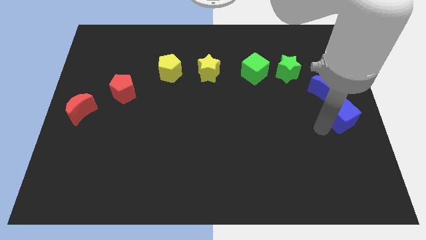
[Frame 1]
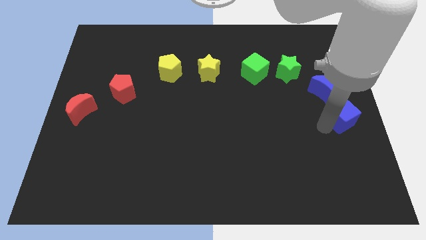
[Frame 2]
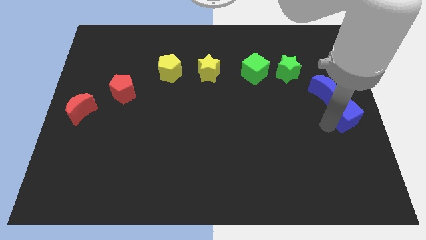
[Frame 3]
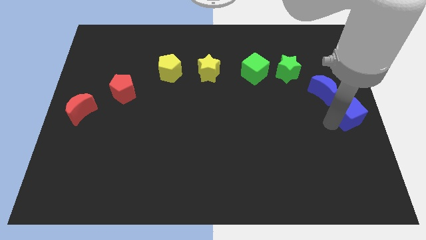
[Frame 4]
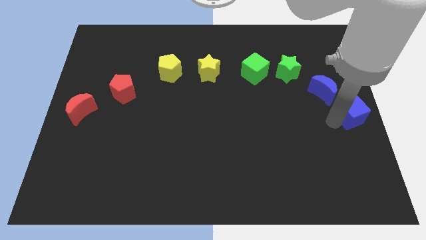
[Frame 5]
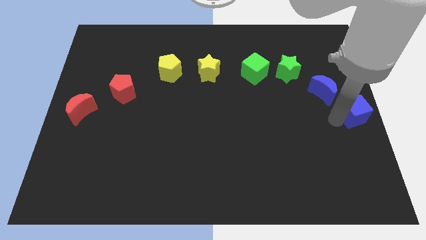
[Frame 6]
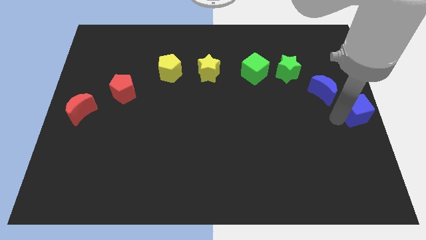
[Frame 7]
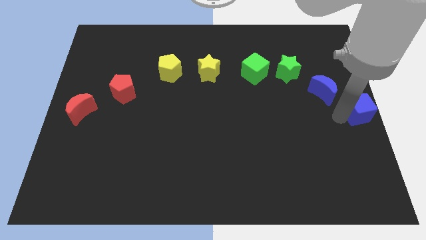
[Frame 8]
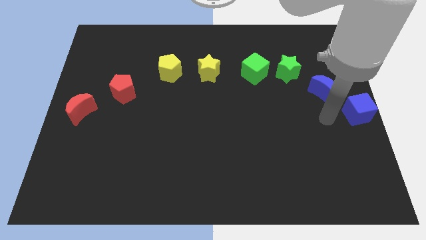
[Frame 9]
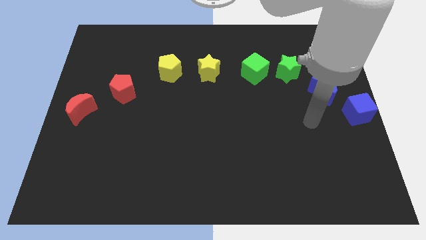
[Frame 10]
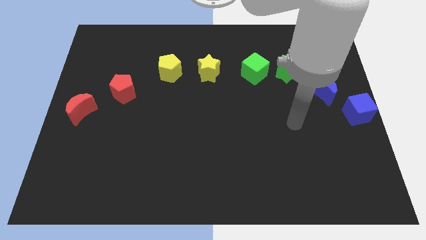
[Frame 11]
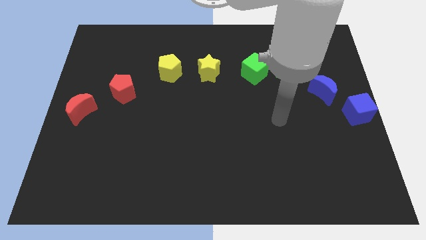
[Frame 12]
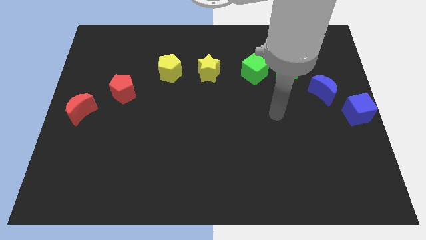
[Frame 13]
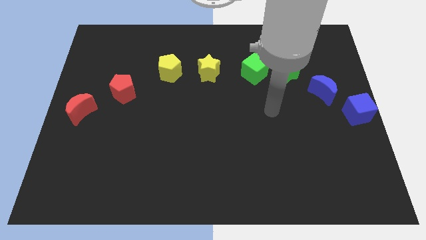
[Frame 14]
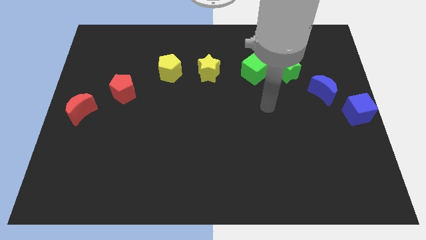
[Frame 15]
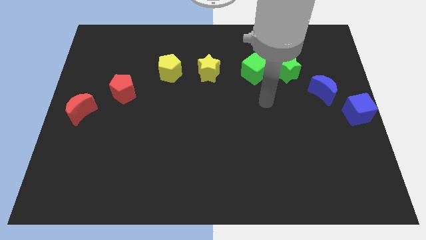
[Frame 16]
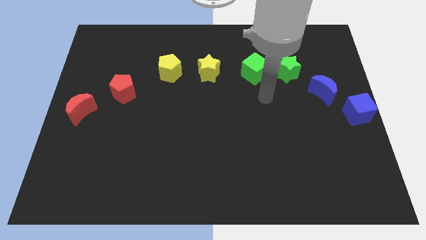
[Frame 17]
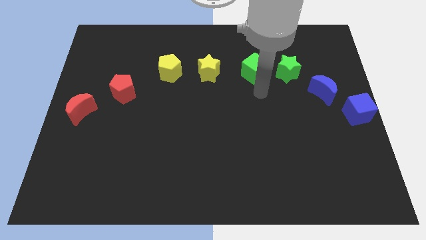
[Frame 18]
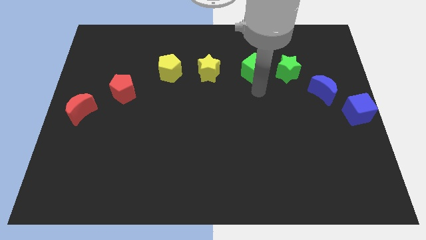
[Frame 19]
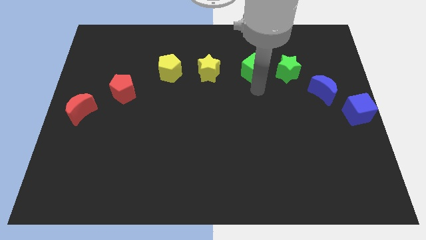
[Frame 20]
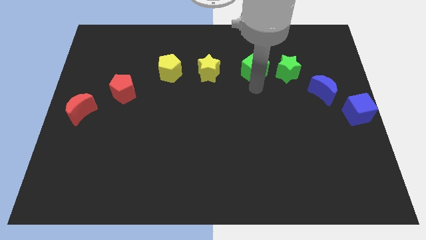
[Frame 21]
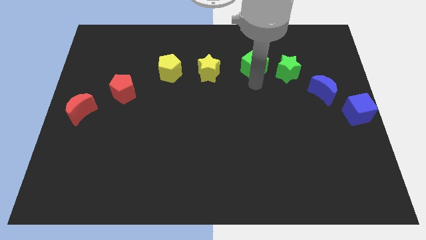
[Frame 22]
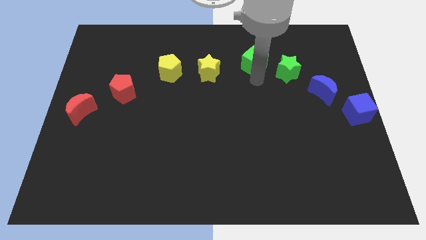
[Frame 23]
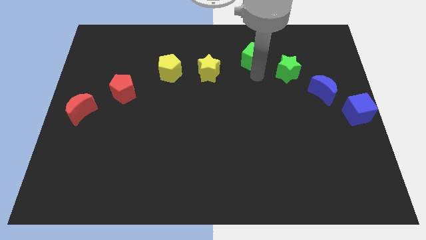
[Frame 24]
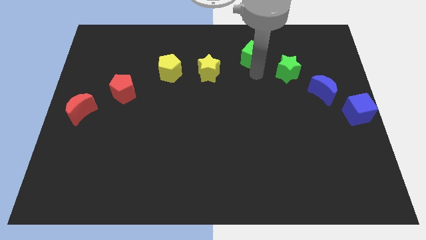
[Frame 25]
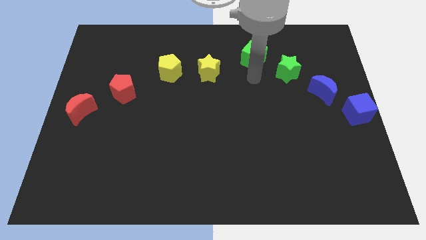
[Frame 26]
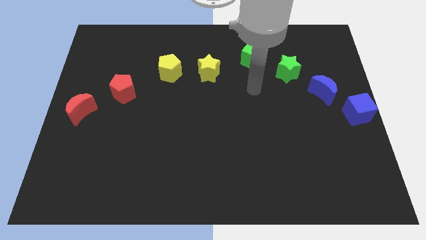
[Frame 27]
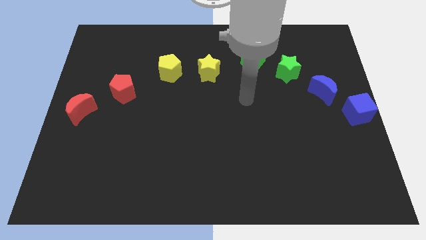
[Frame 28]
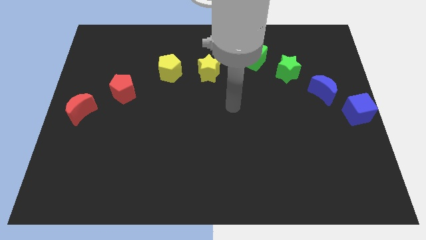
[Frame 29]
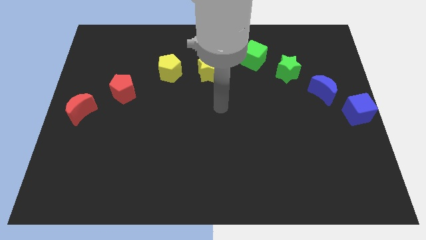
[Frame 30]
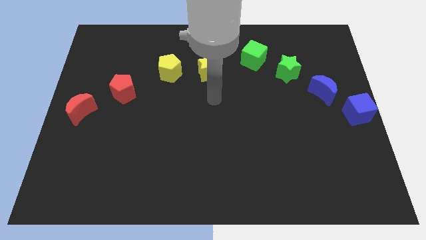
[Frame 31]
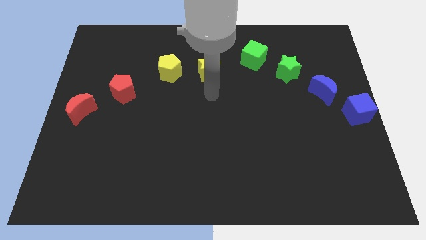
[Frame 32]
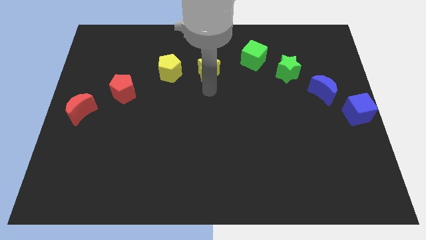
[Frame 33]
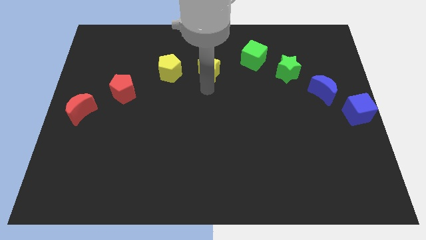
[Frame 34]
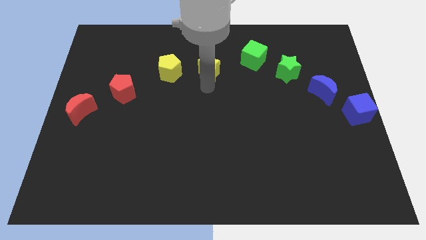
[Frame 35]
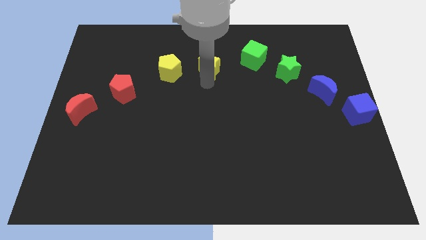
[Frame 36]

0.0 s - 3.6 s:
move the green cube to the top

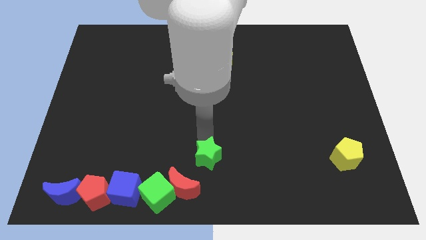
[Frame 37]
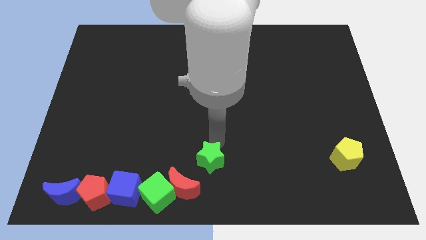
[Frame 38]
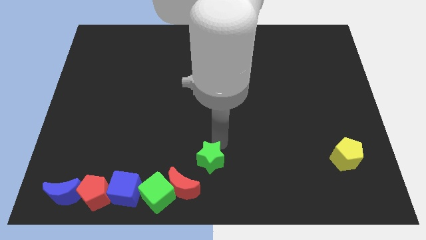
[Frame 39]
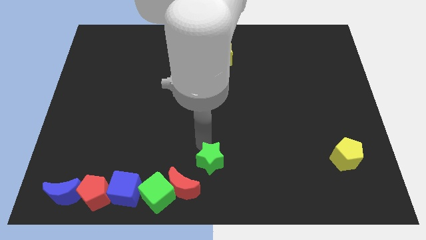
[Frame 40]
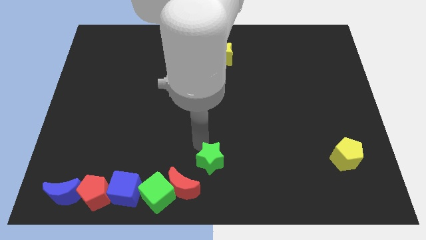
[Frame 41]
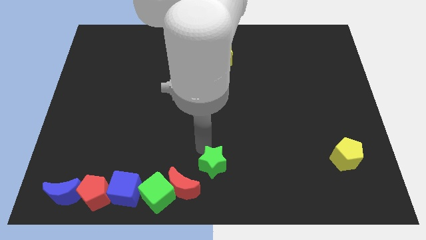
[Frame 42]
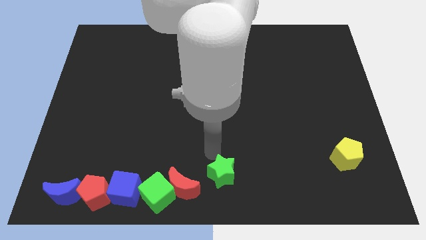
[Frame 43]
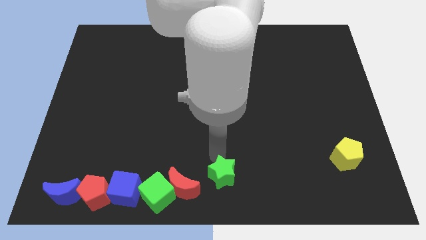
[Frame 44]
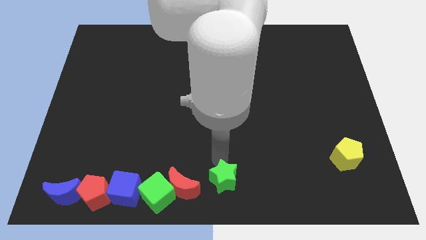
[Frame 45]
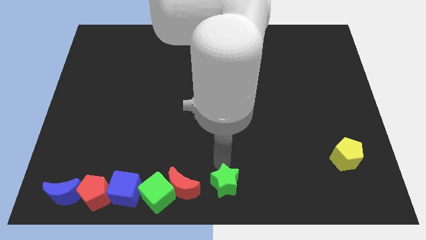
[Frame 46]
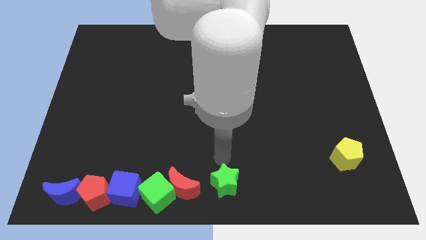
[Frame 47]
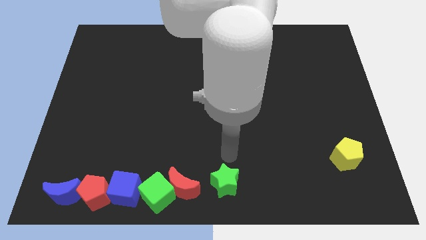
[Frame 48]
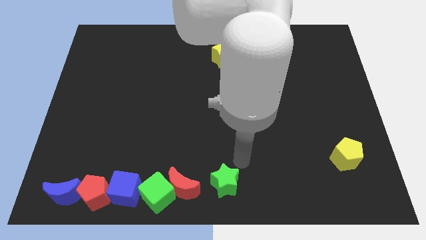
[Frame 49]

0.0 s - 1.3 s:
place the green star to the right of the red crescent

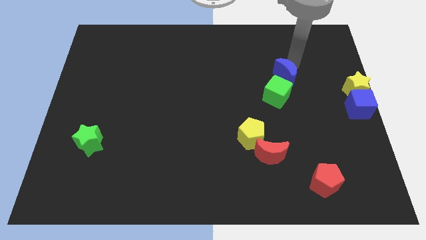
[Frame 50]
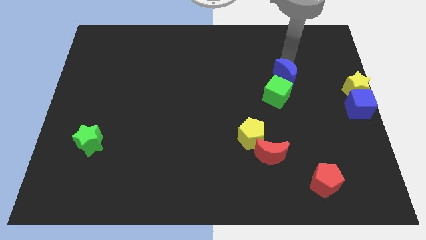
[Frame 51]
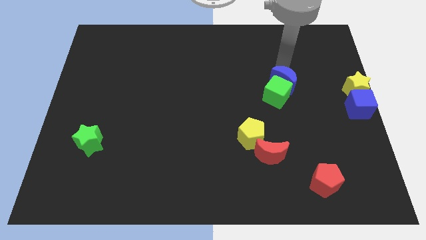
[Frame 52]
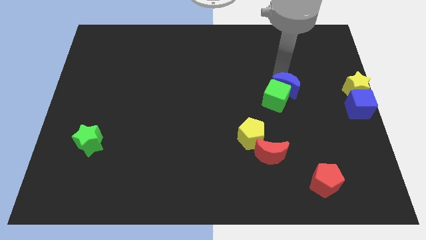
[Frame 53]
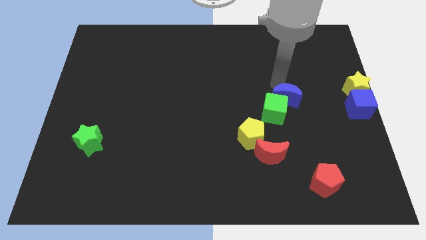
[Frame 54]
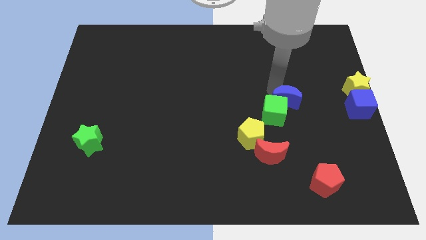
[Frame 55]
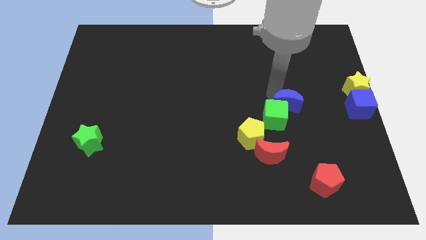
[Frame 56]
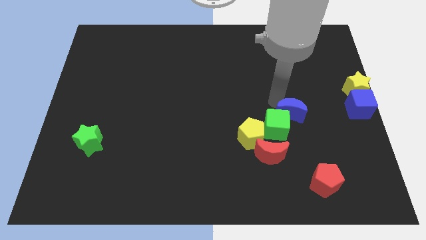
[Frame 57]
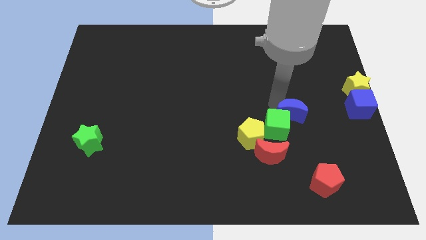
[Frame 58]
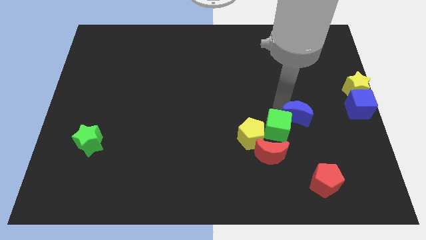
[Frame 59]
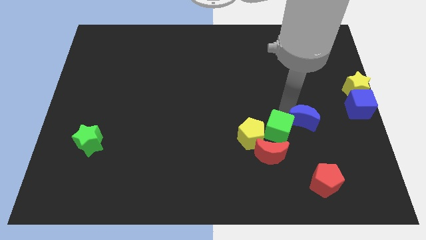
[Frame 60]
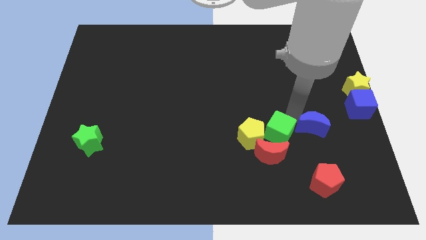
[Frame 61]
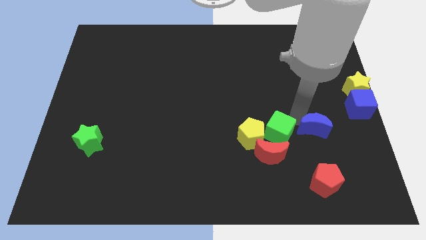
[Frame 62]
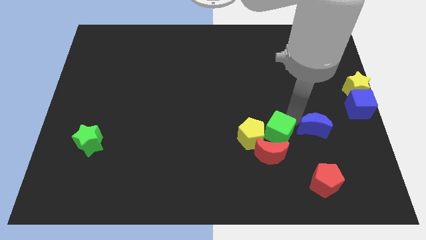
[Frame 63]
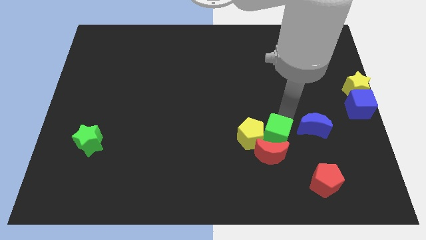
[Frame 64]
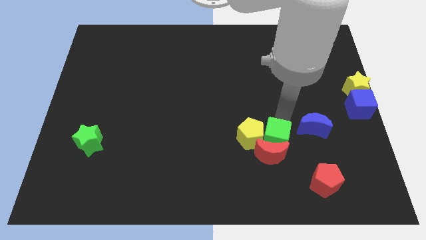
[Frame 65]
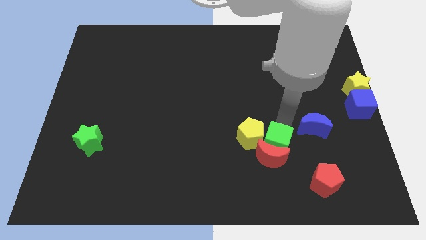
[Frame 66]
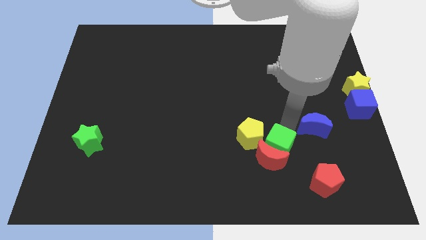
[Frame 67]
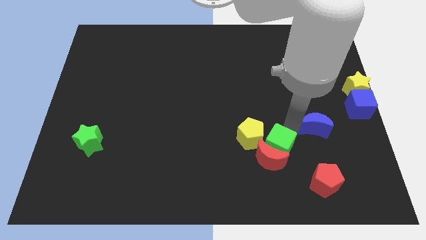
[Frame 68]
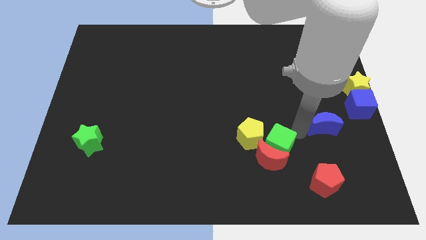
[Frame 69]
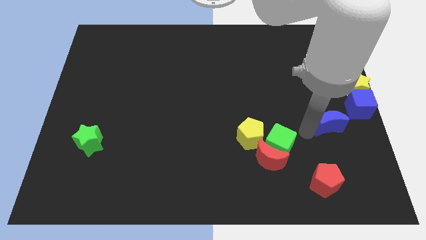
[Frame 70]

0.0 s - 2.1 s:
separate the blue crescent from the green cube

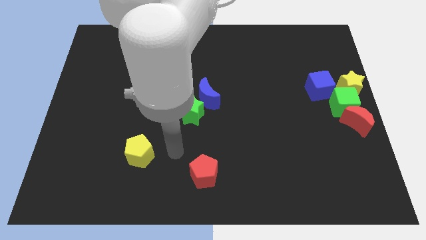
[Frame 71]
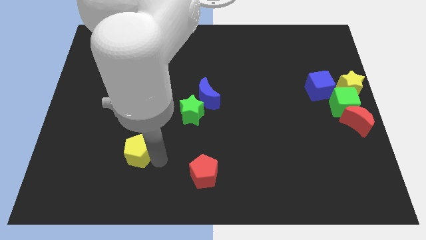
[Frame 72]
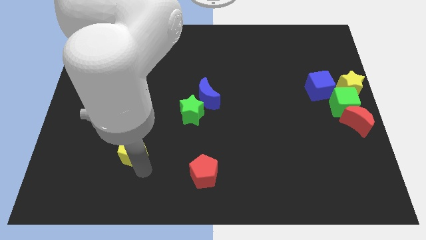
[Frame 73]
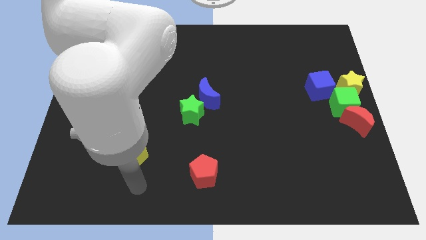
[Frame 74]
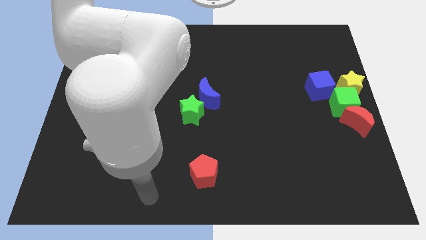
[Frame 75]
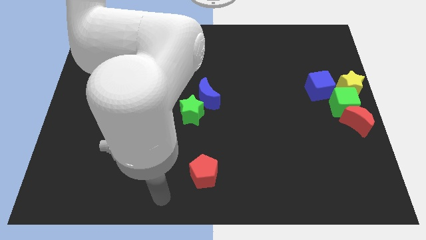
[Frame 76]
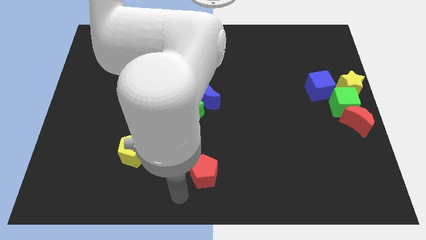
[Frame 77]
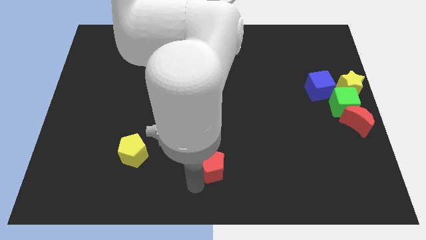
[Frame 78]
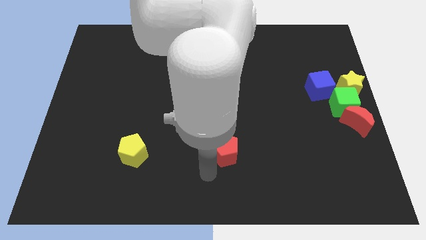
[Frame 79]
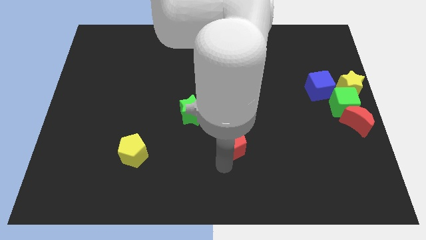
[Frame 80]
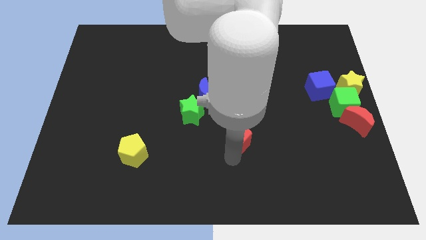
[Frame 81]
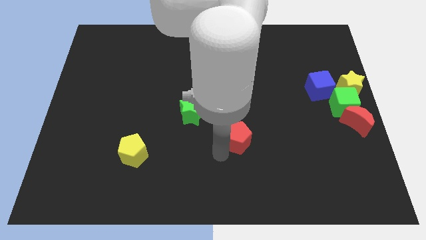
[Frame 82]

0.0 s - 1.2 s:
place the red pentagon diagonal to the green star

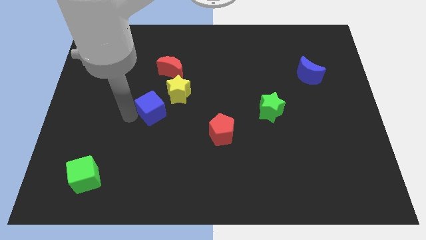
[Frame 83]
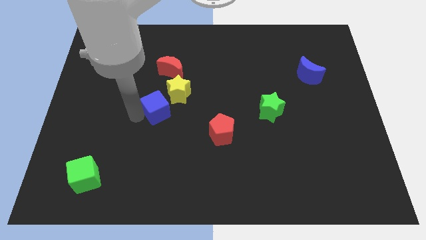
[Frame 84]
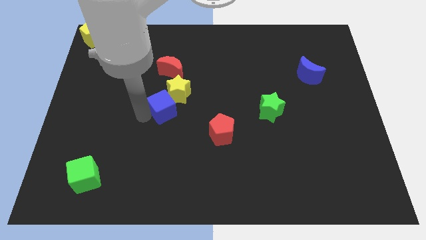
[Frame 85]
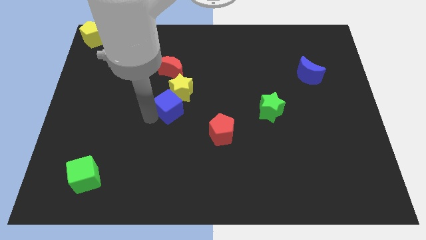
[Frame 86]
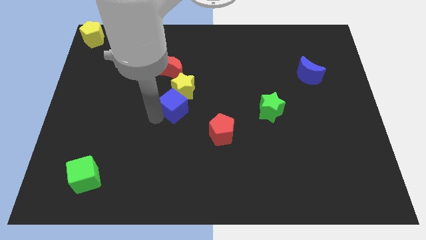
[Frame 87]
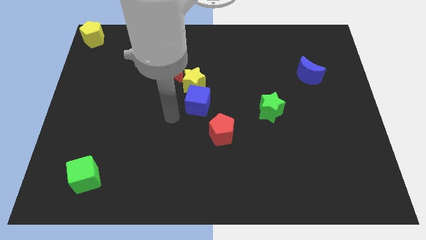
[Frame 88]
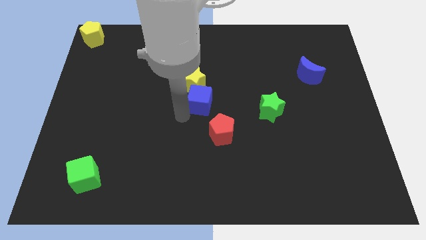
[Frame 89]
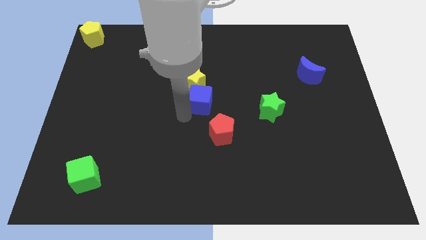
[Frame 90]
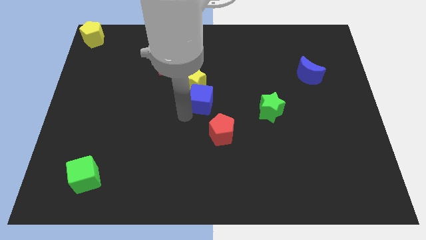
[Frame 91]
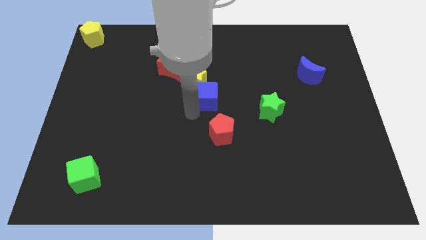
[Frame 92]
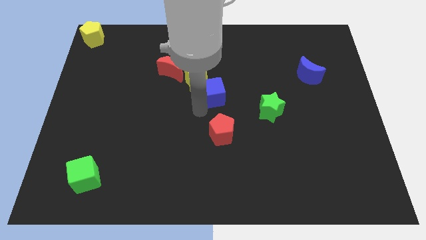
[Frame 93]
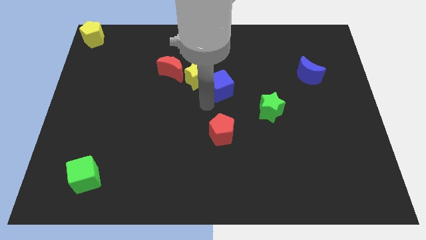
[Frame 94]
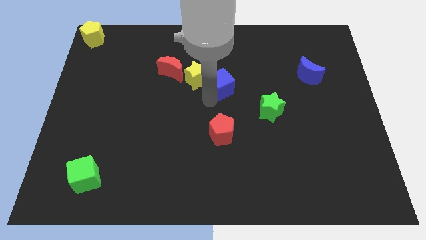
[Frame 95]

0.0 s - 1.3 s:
move blue moon above red pentagon
